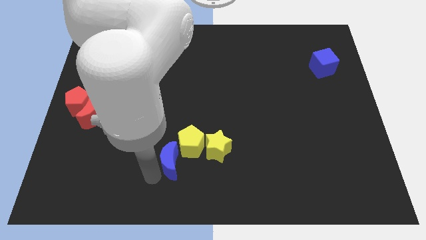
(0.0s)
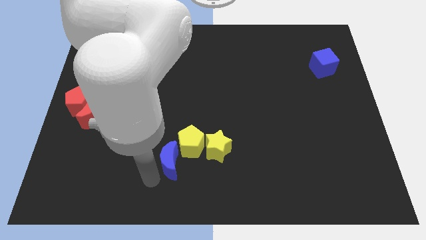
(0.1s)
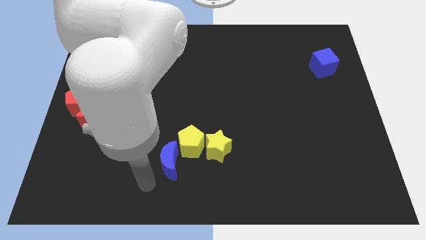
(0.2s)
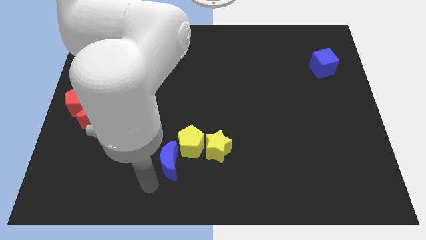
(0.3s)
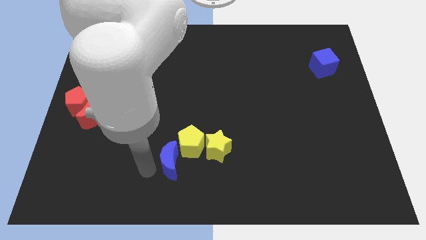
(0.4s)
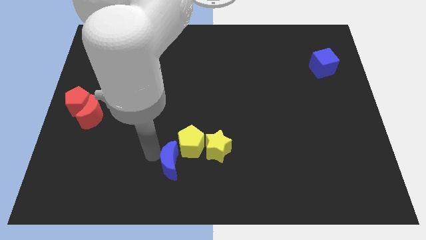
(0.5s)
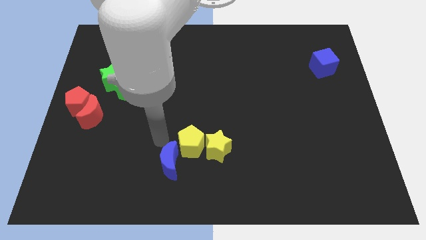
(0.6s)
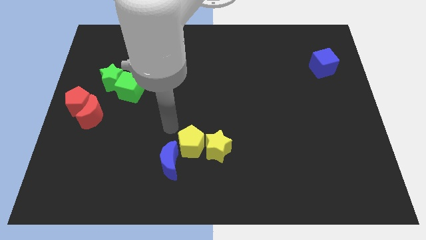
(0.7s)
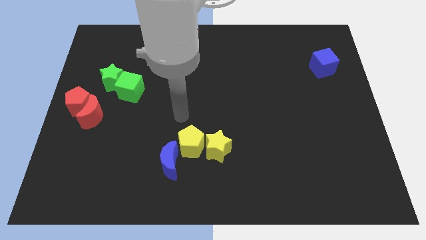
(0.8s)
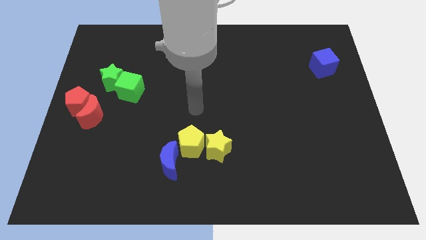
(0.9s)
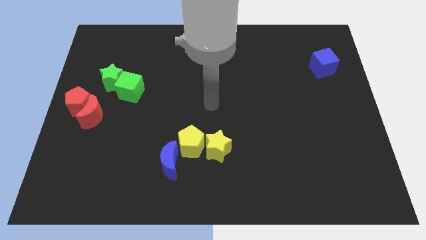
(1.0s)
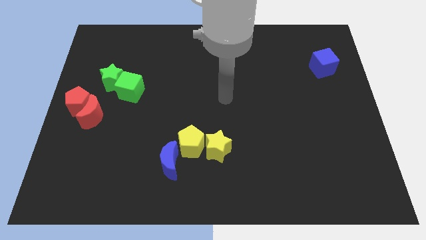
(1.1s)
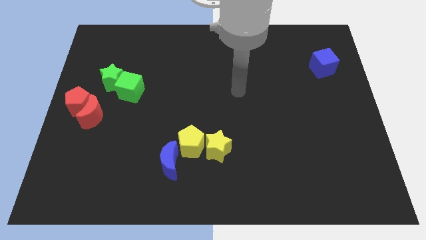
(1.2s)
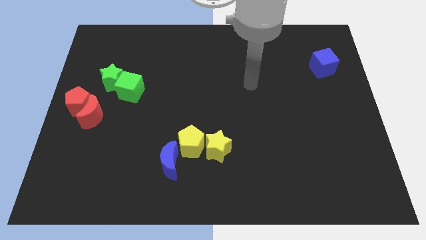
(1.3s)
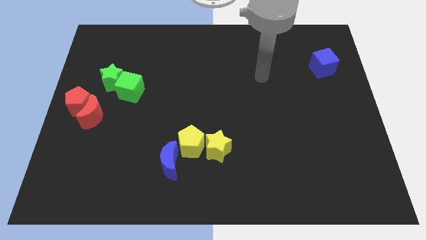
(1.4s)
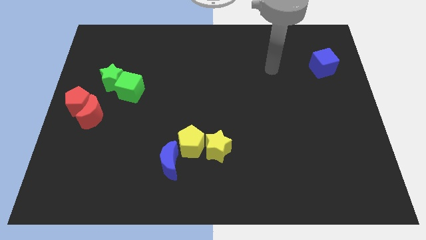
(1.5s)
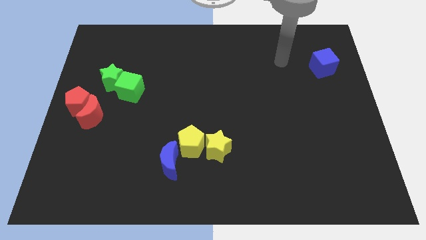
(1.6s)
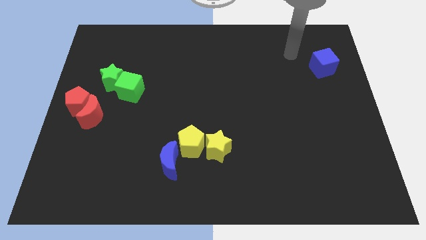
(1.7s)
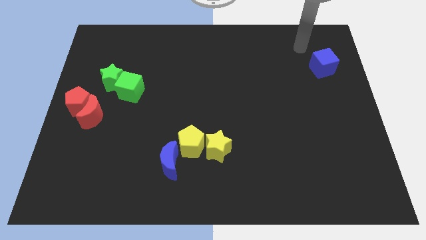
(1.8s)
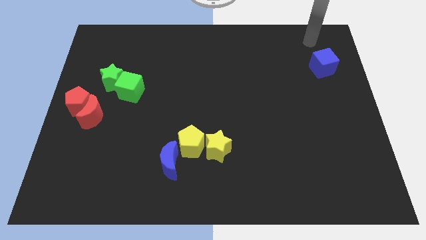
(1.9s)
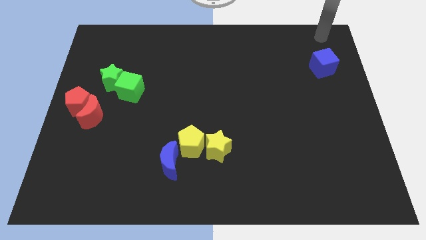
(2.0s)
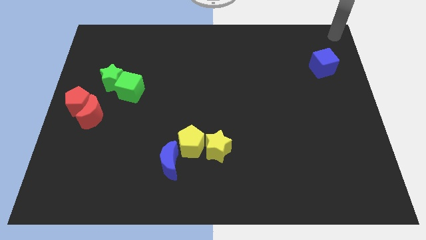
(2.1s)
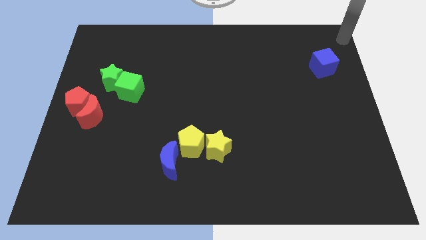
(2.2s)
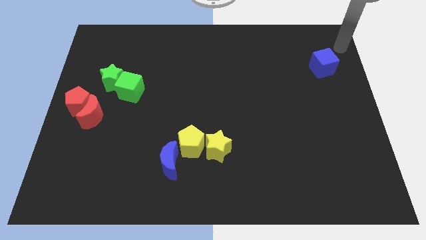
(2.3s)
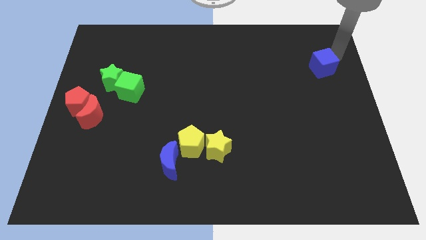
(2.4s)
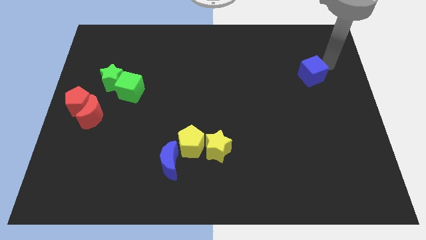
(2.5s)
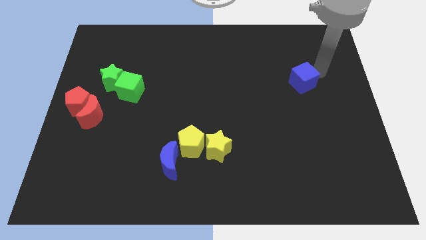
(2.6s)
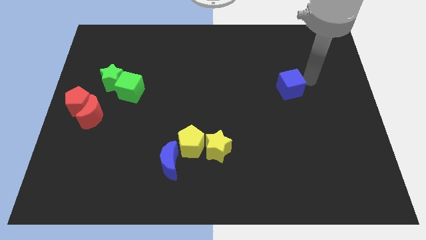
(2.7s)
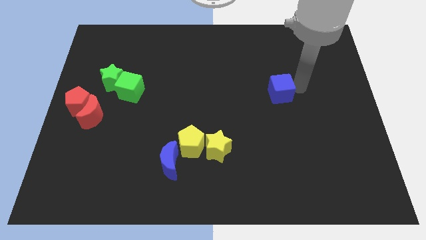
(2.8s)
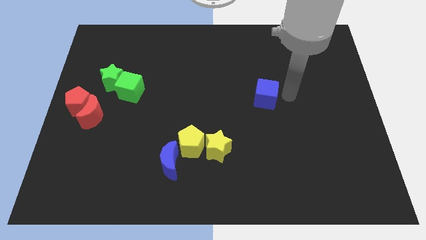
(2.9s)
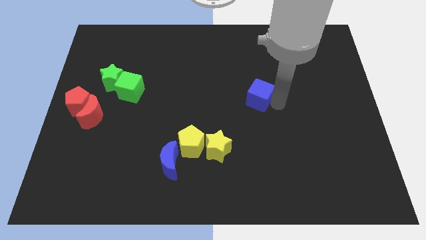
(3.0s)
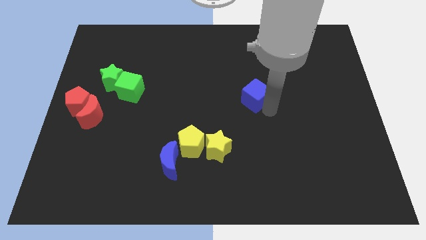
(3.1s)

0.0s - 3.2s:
push the blue cube towards the center of the board

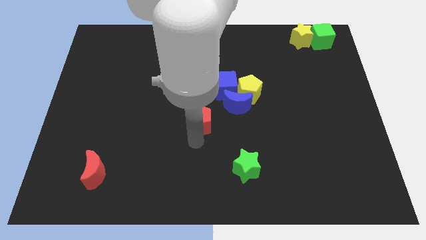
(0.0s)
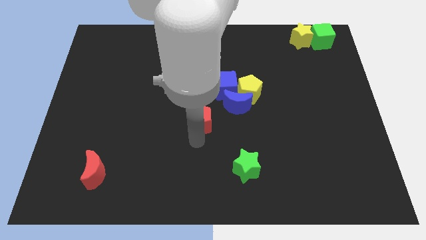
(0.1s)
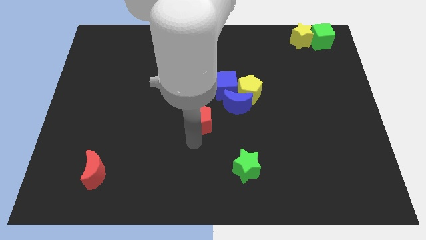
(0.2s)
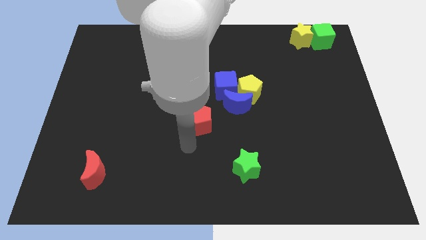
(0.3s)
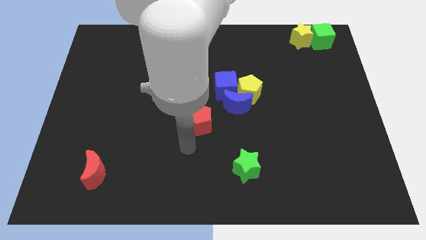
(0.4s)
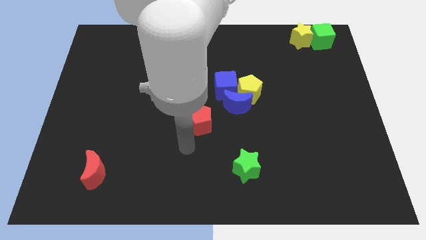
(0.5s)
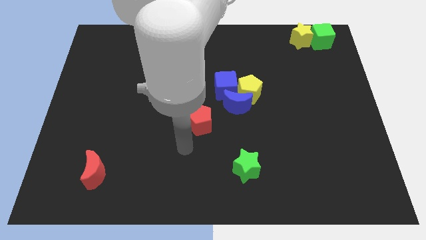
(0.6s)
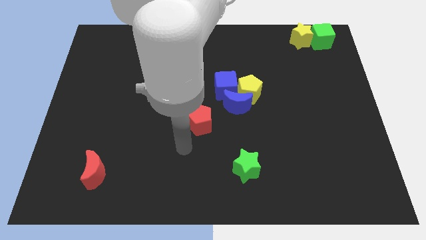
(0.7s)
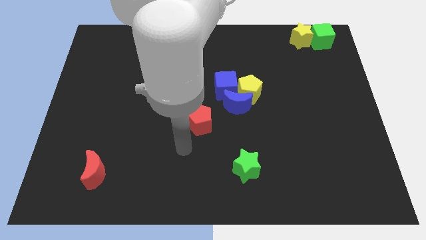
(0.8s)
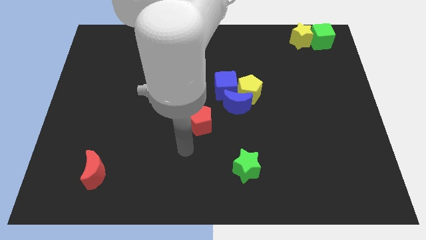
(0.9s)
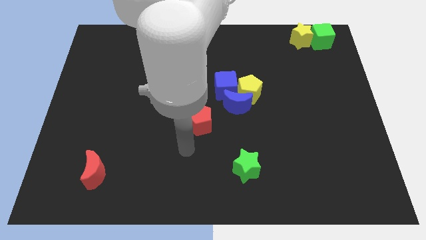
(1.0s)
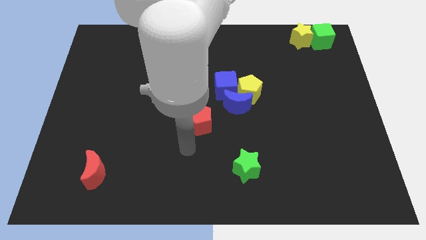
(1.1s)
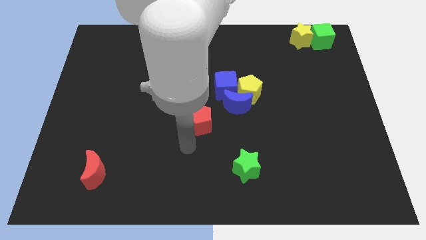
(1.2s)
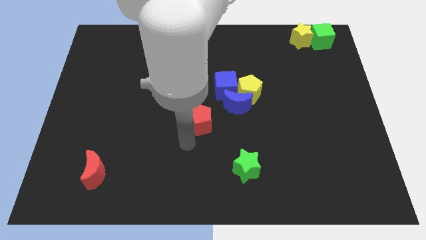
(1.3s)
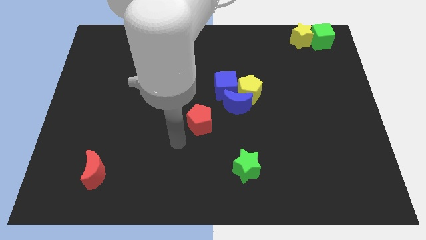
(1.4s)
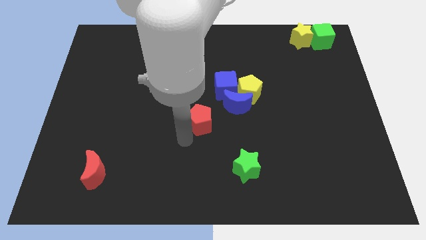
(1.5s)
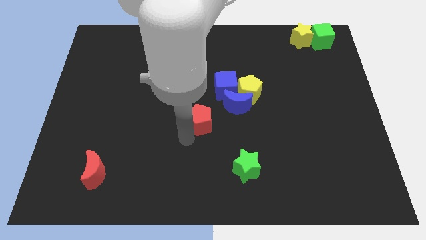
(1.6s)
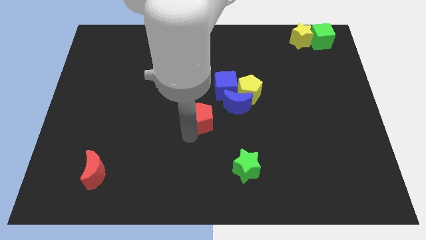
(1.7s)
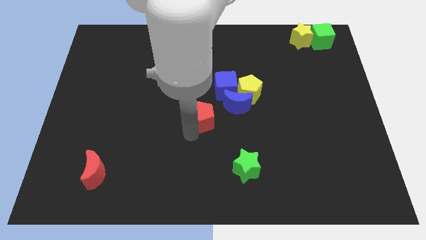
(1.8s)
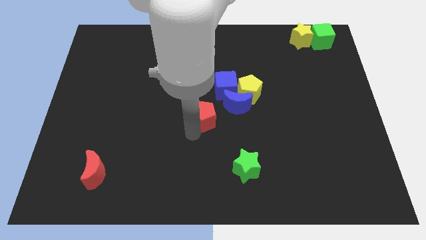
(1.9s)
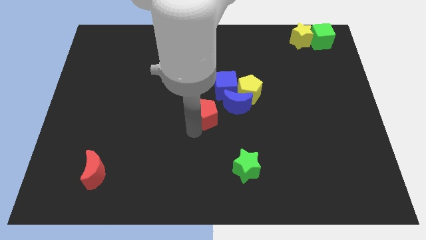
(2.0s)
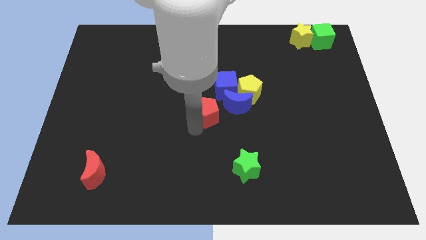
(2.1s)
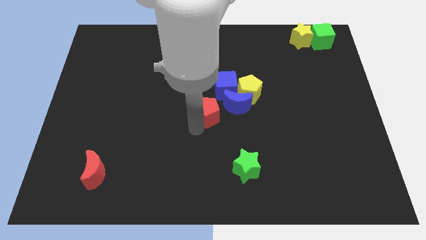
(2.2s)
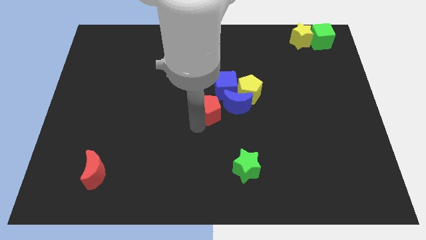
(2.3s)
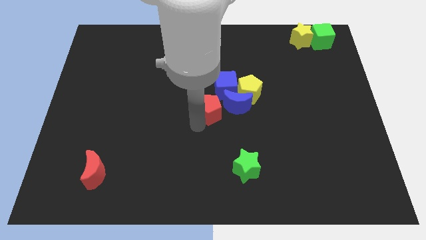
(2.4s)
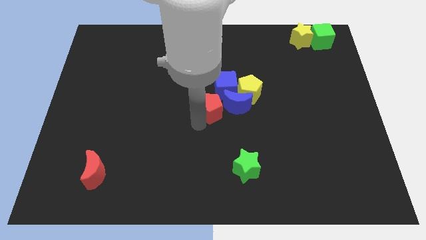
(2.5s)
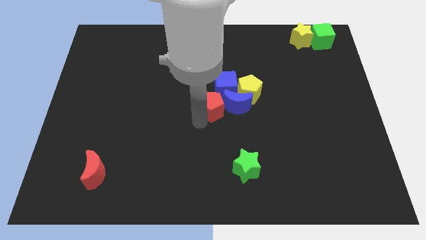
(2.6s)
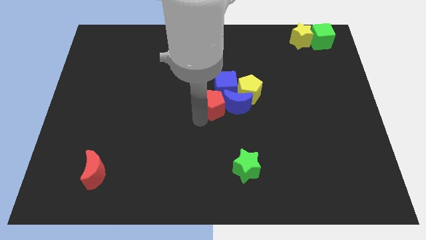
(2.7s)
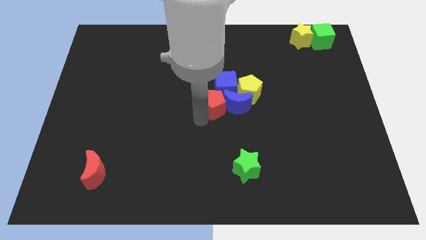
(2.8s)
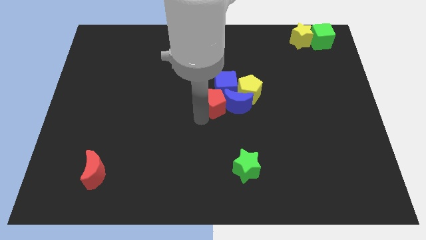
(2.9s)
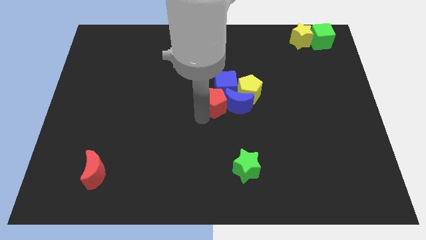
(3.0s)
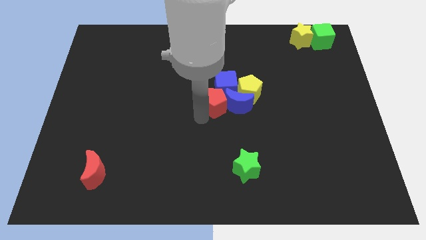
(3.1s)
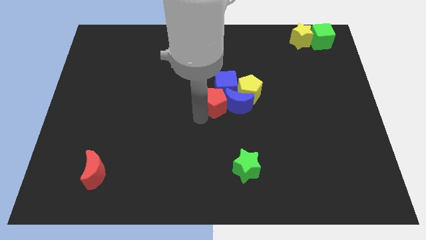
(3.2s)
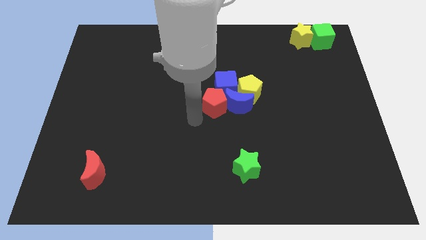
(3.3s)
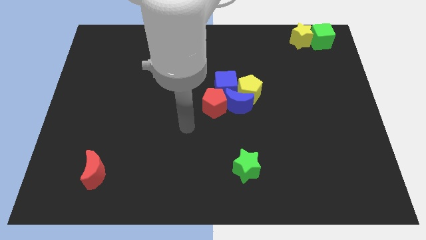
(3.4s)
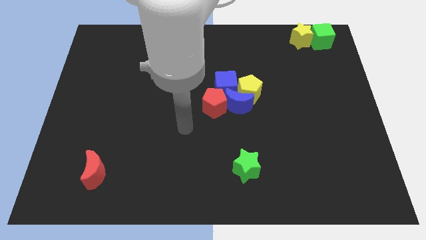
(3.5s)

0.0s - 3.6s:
push red pentagon into blue cube and crescent

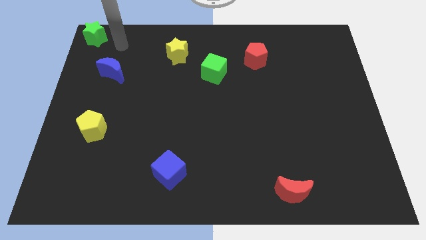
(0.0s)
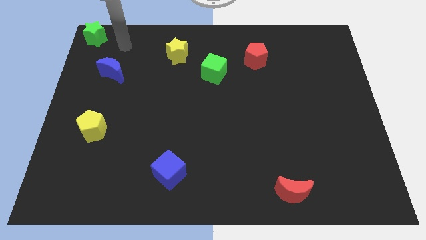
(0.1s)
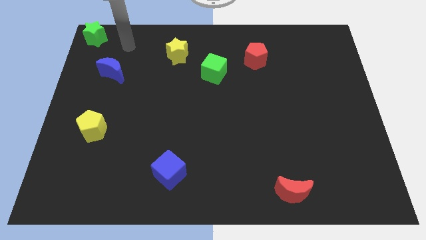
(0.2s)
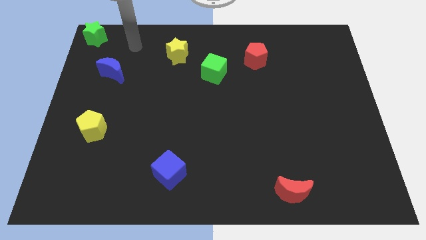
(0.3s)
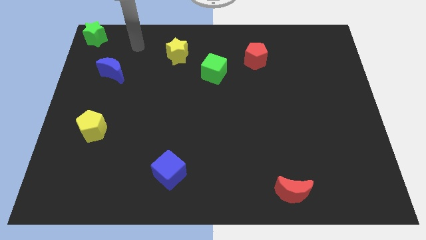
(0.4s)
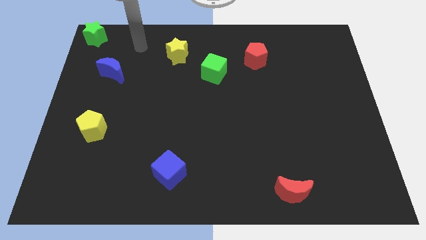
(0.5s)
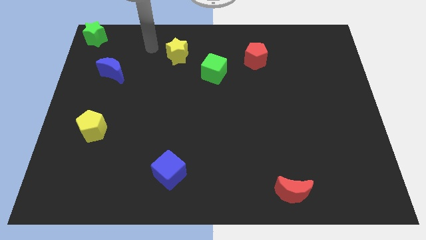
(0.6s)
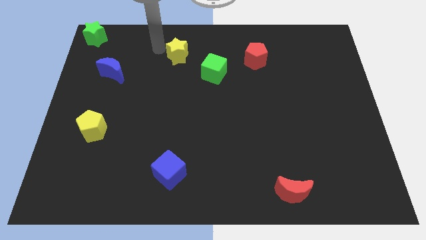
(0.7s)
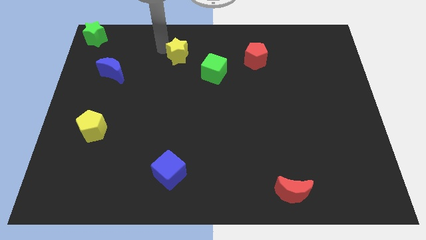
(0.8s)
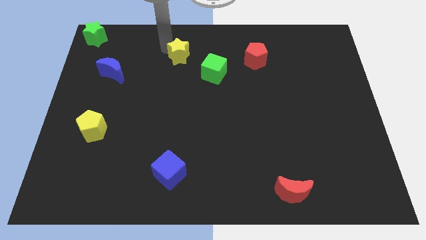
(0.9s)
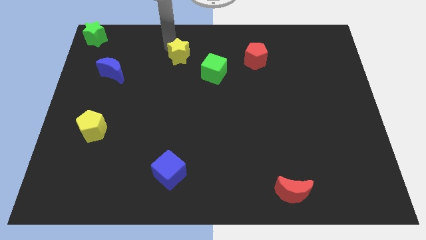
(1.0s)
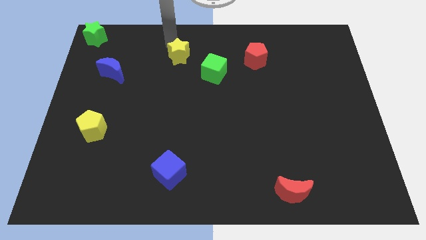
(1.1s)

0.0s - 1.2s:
tap your hand on the top left side of yellow star

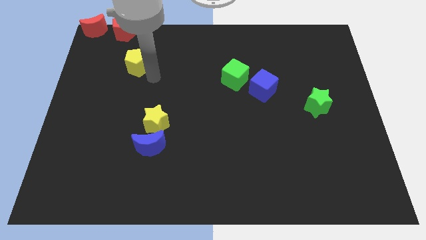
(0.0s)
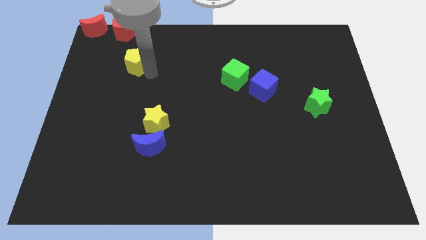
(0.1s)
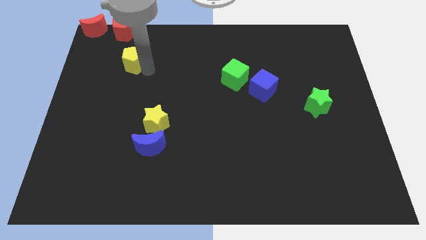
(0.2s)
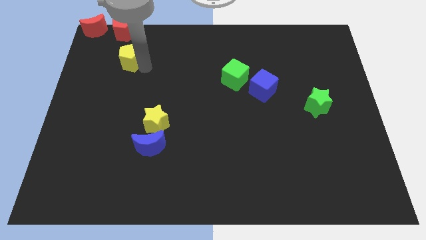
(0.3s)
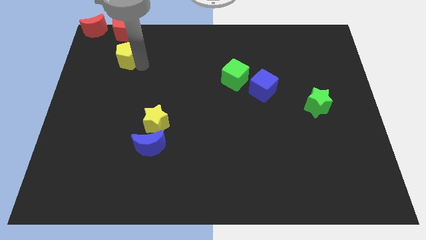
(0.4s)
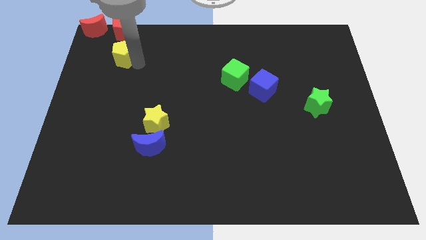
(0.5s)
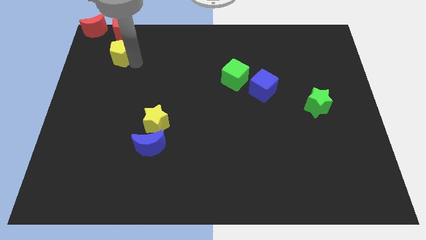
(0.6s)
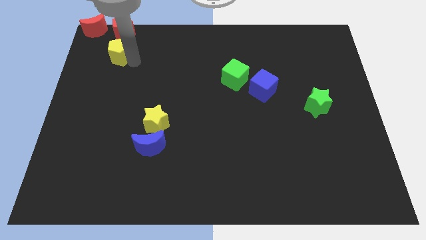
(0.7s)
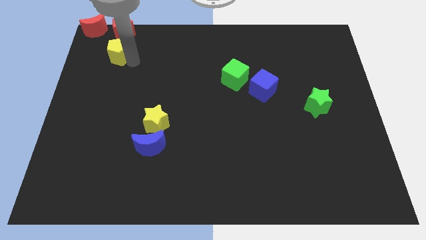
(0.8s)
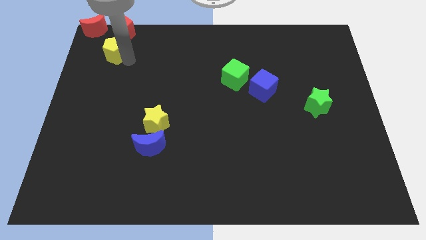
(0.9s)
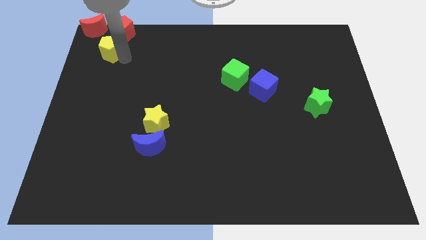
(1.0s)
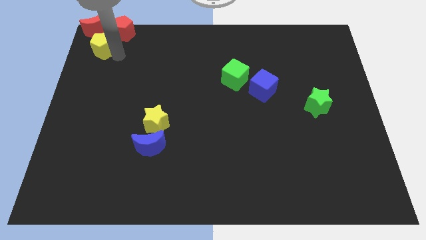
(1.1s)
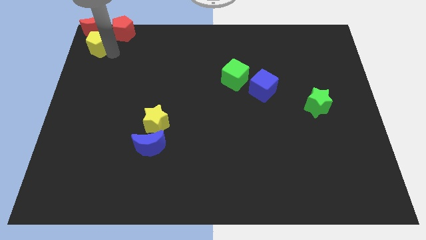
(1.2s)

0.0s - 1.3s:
put the yellow pentagon at the bottom of the red moon
